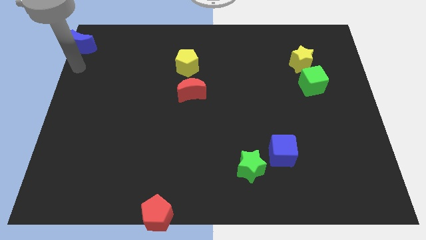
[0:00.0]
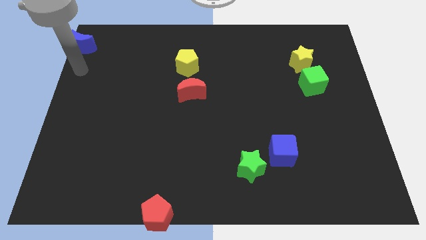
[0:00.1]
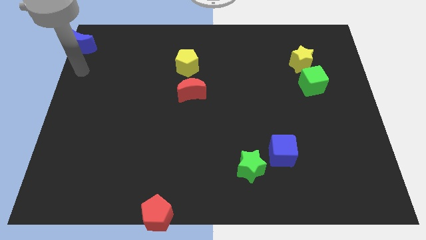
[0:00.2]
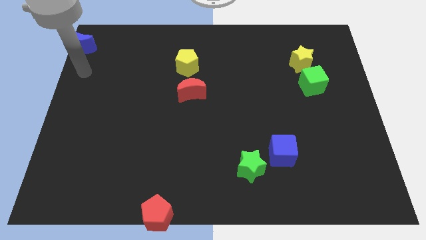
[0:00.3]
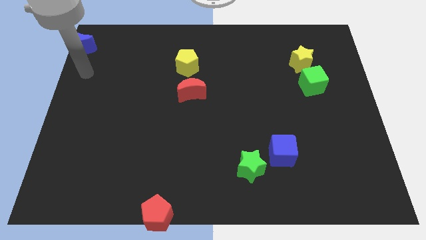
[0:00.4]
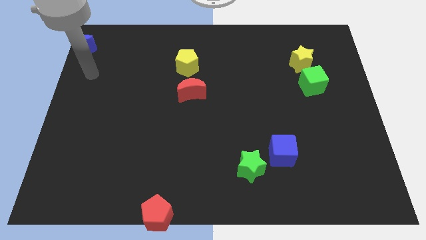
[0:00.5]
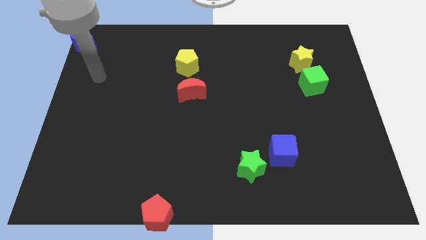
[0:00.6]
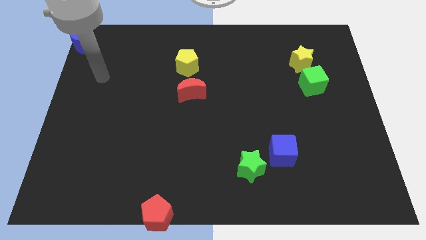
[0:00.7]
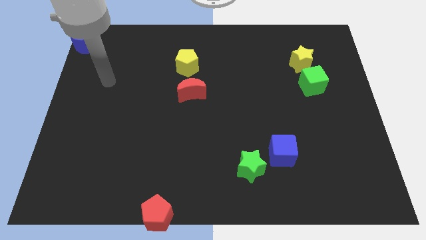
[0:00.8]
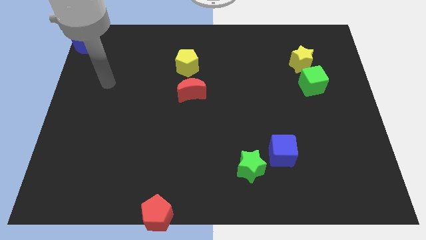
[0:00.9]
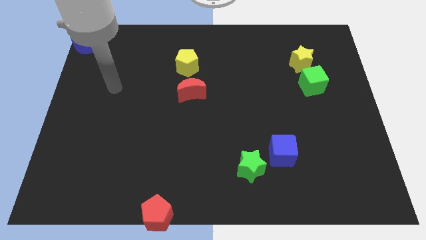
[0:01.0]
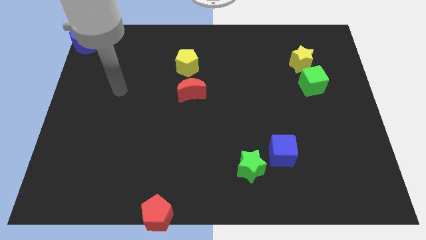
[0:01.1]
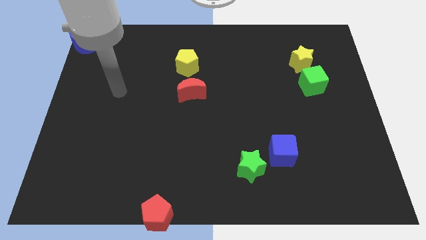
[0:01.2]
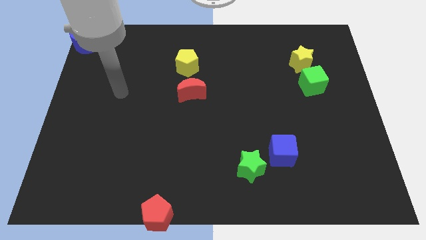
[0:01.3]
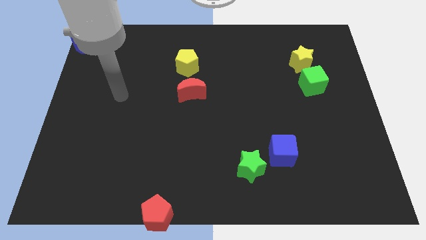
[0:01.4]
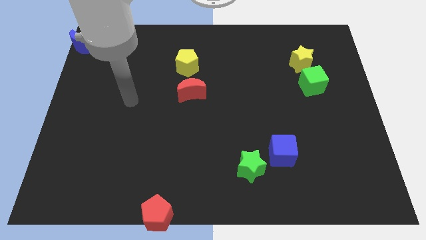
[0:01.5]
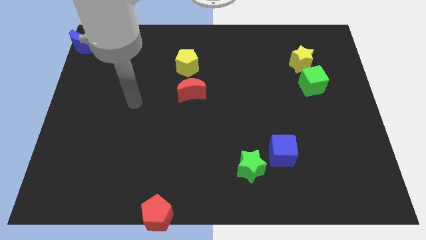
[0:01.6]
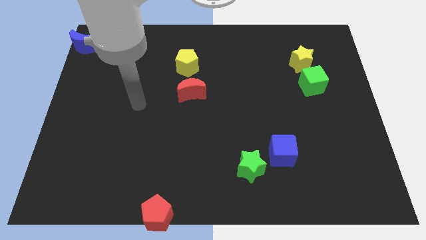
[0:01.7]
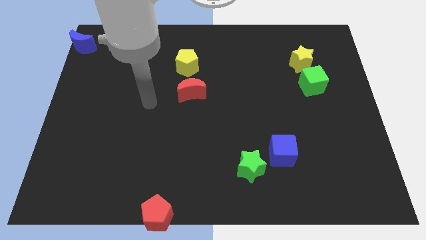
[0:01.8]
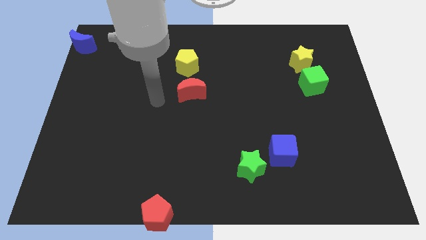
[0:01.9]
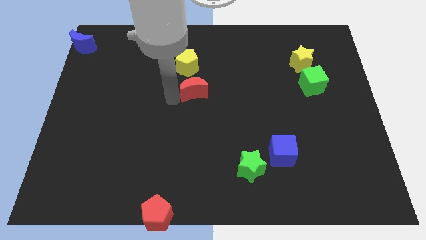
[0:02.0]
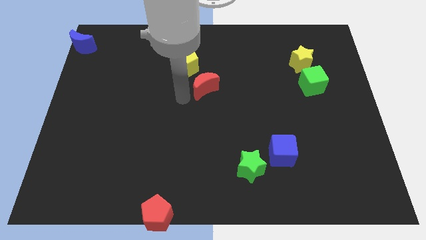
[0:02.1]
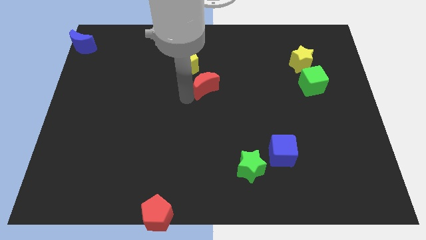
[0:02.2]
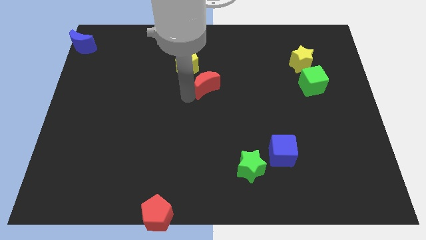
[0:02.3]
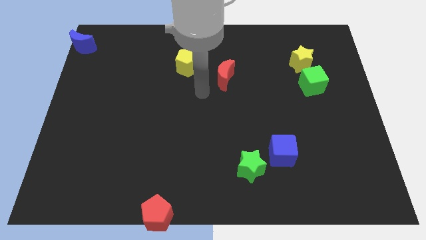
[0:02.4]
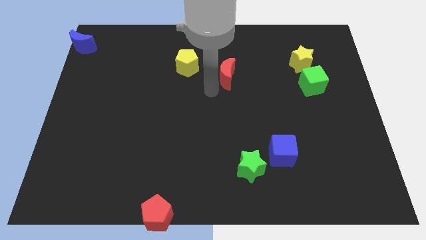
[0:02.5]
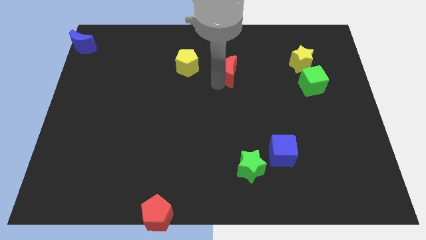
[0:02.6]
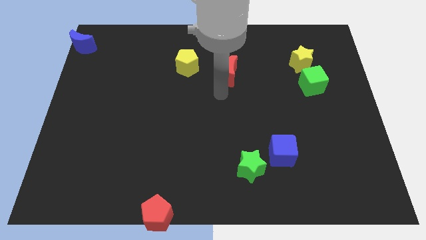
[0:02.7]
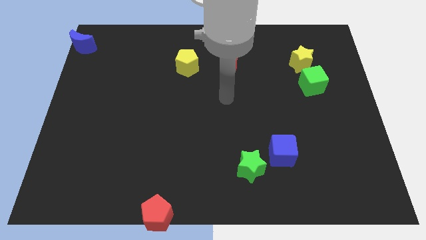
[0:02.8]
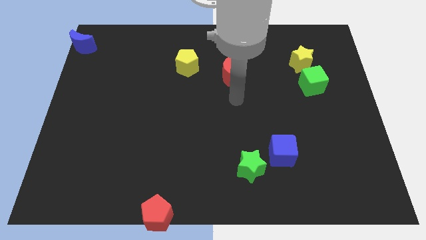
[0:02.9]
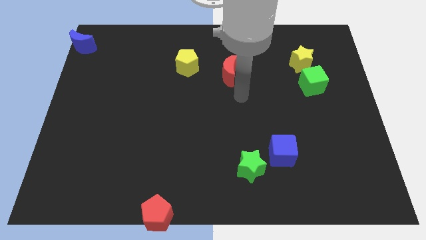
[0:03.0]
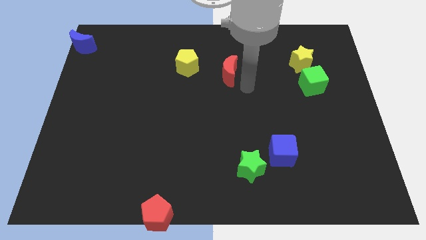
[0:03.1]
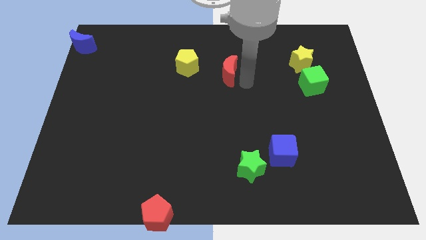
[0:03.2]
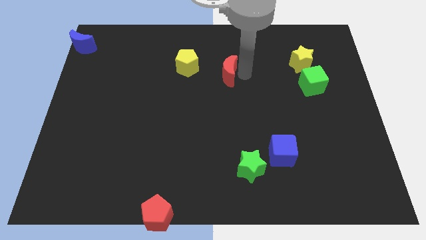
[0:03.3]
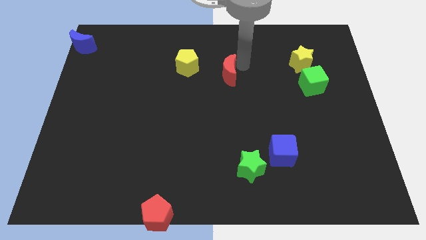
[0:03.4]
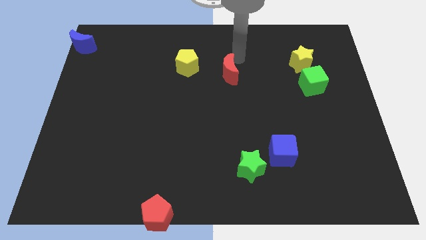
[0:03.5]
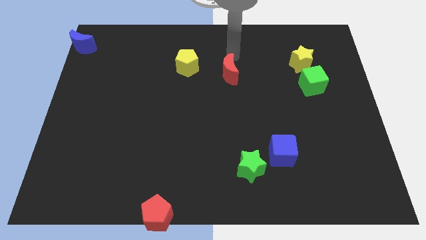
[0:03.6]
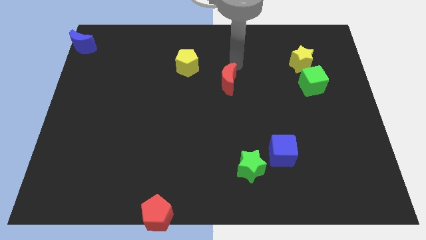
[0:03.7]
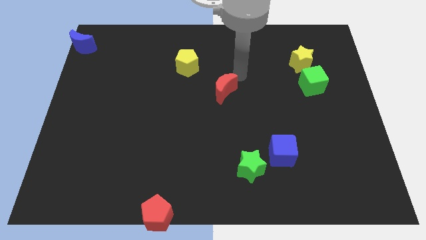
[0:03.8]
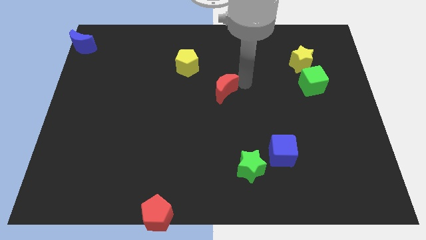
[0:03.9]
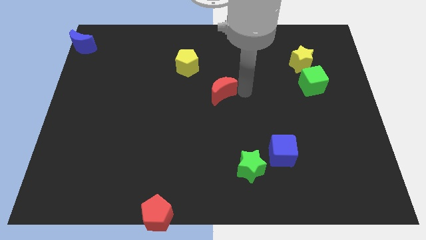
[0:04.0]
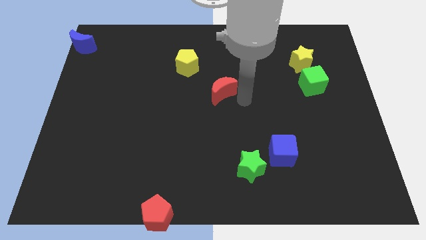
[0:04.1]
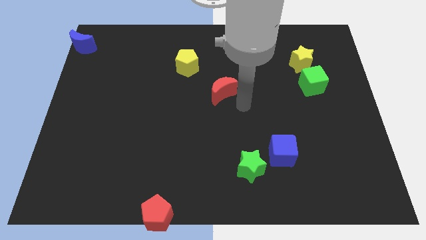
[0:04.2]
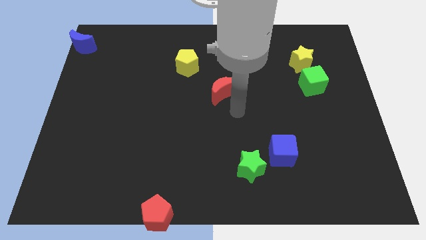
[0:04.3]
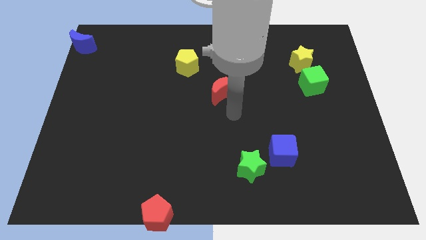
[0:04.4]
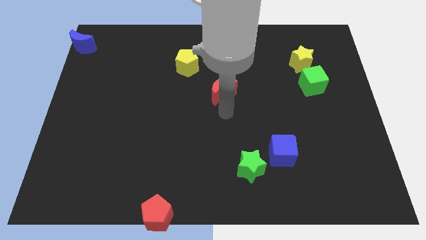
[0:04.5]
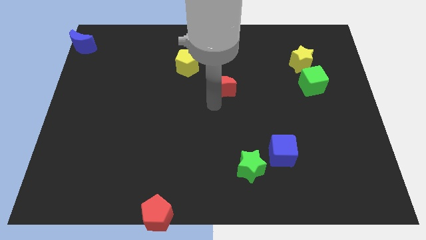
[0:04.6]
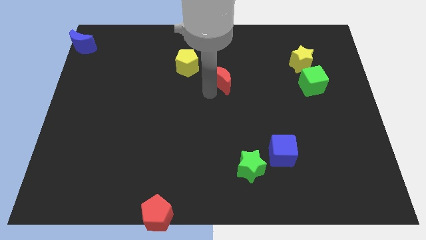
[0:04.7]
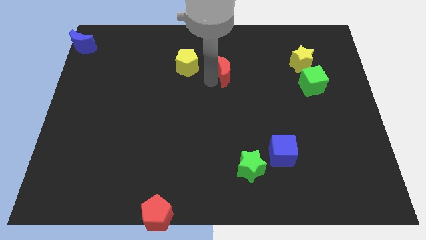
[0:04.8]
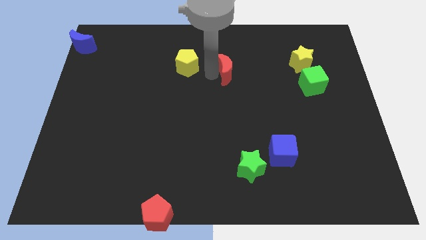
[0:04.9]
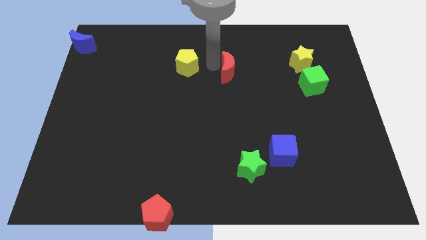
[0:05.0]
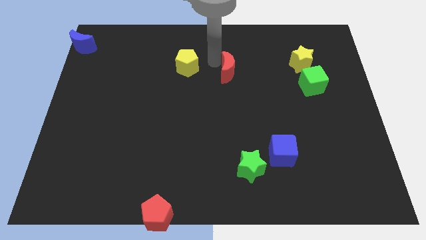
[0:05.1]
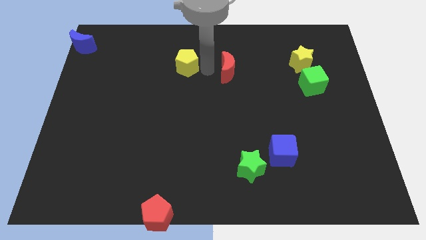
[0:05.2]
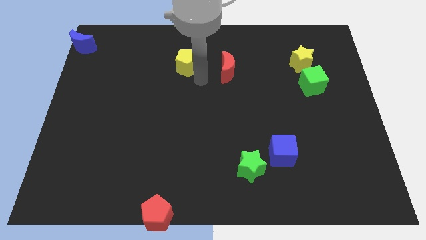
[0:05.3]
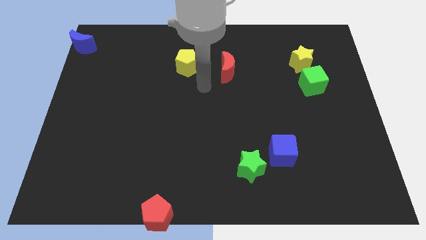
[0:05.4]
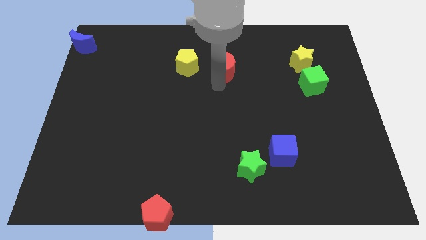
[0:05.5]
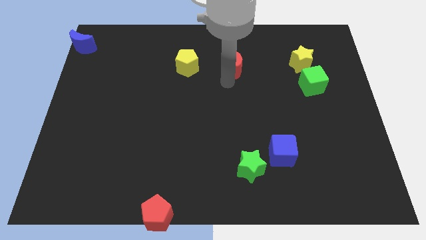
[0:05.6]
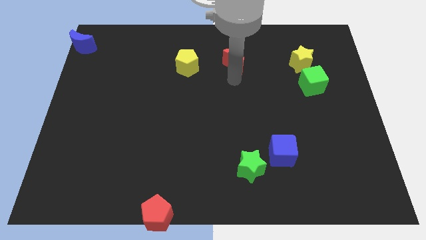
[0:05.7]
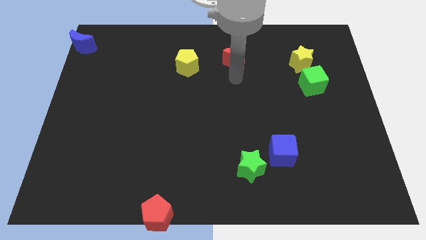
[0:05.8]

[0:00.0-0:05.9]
push the red crescent right to the yellow pentagon

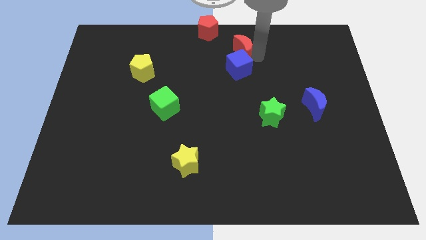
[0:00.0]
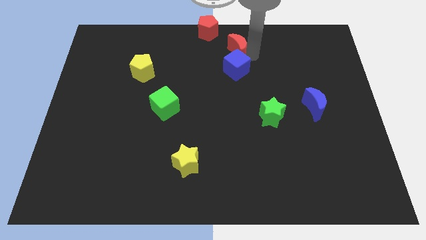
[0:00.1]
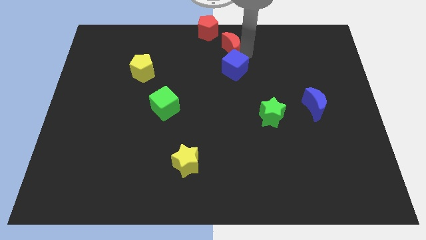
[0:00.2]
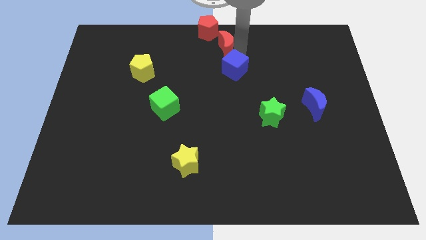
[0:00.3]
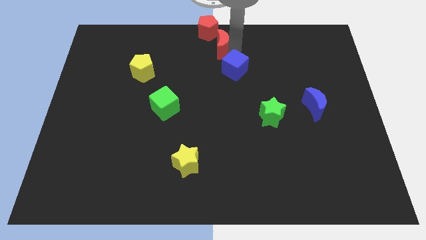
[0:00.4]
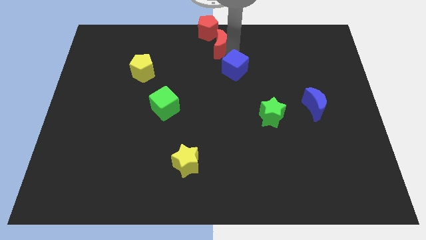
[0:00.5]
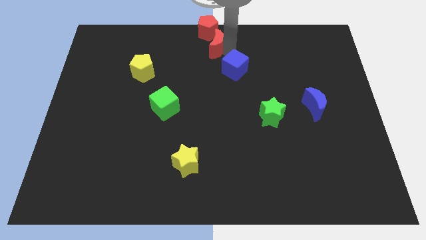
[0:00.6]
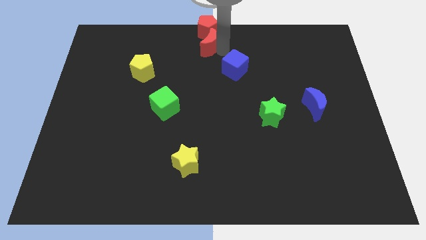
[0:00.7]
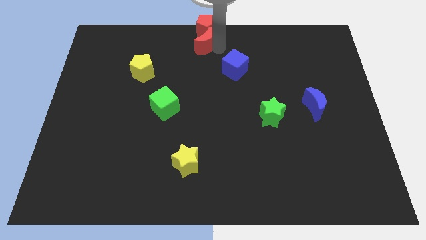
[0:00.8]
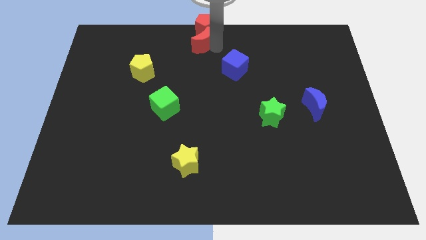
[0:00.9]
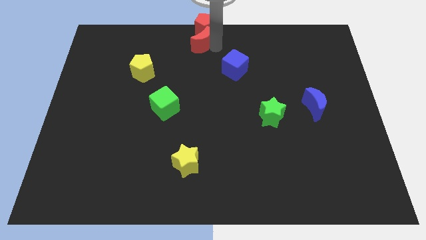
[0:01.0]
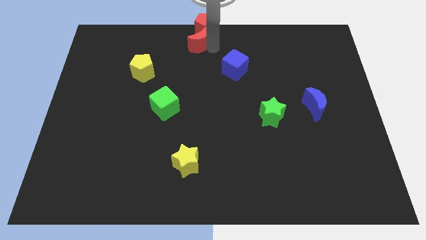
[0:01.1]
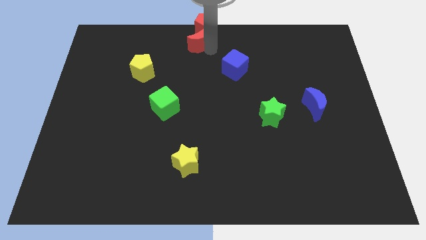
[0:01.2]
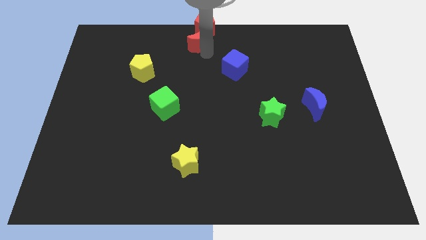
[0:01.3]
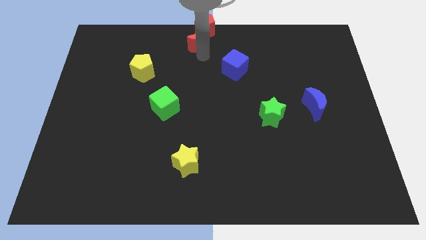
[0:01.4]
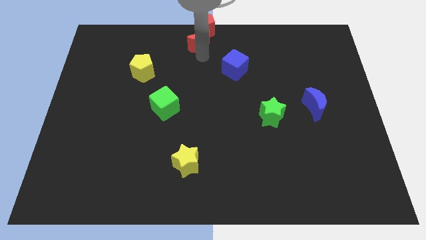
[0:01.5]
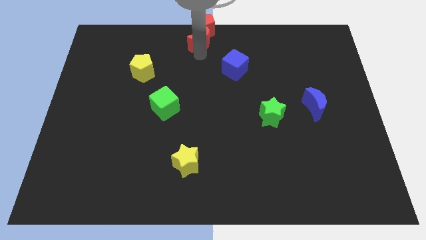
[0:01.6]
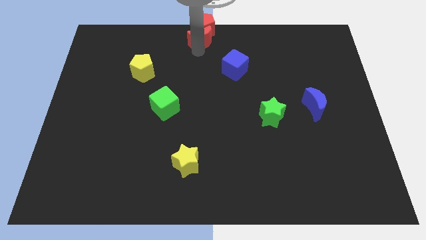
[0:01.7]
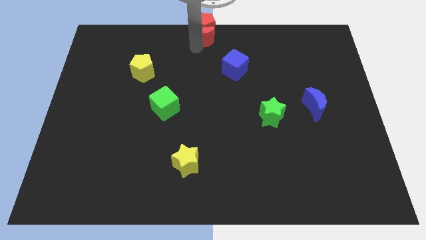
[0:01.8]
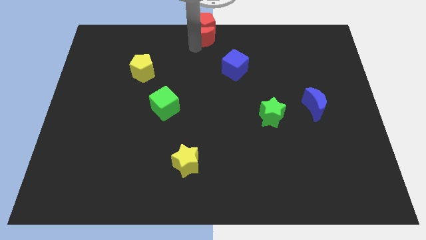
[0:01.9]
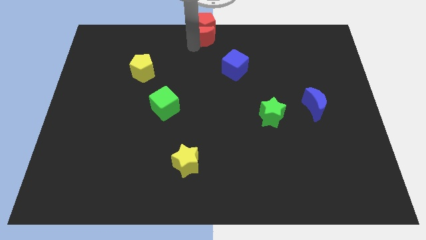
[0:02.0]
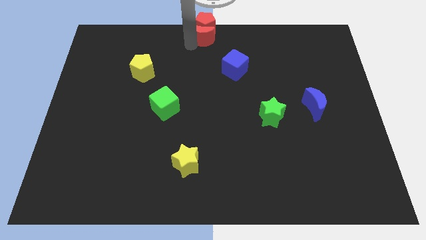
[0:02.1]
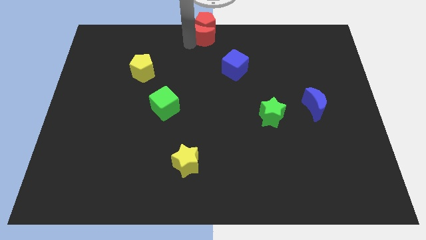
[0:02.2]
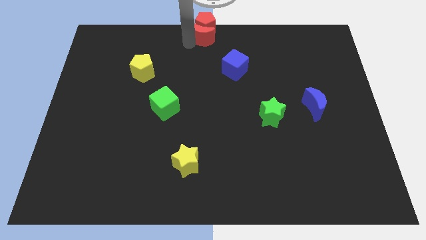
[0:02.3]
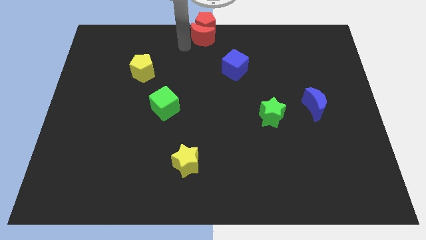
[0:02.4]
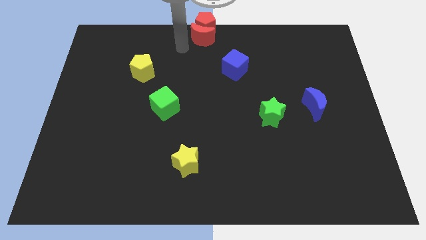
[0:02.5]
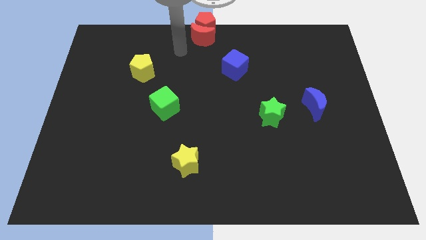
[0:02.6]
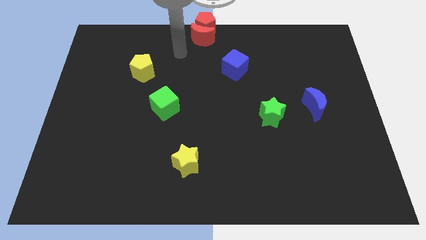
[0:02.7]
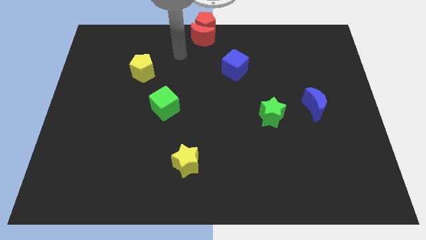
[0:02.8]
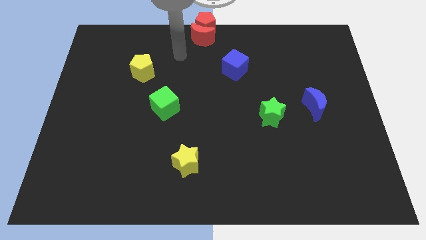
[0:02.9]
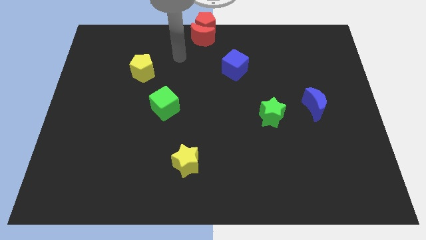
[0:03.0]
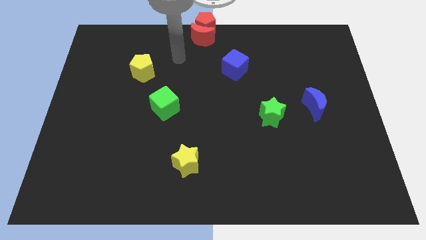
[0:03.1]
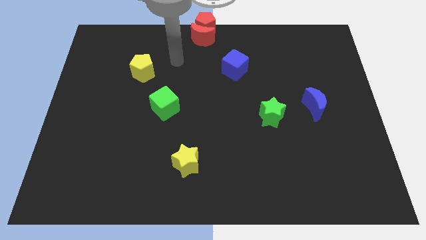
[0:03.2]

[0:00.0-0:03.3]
move the red crescent into the red pentagon
